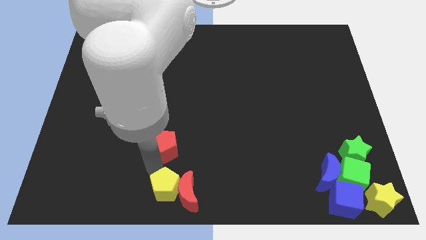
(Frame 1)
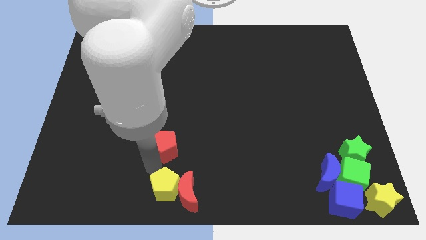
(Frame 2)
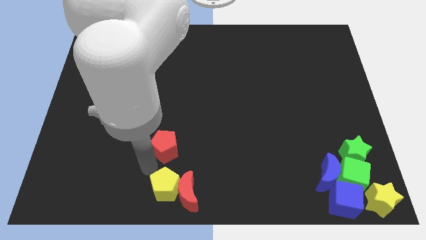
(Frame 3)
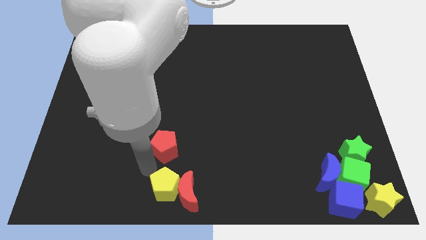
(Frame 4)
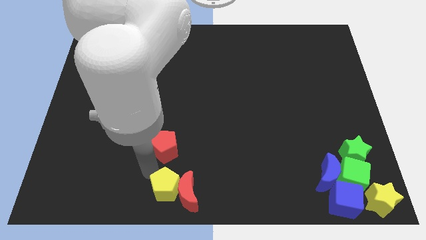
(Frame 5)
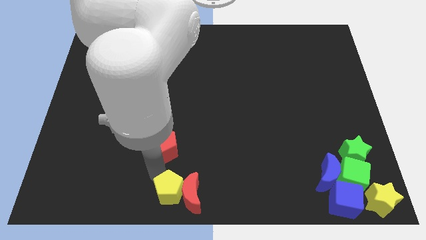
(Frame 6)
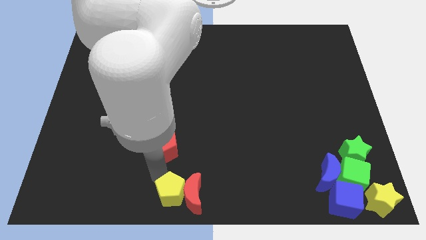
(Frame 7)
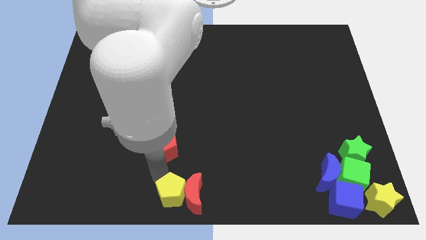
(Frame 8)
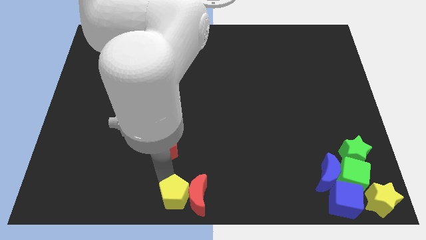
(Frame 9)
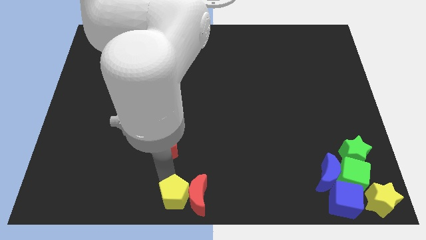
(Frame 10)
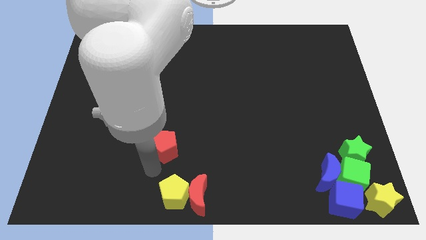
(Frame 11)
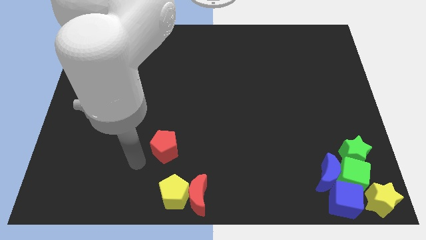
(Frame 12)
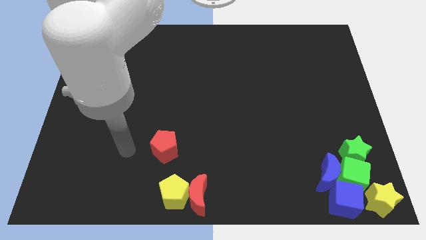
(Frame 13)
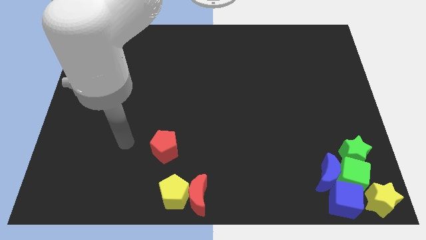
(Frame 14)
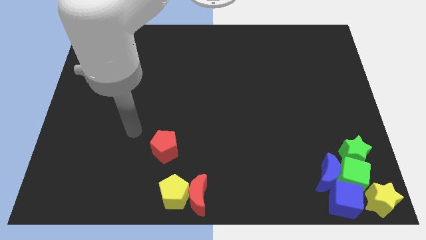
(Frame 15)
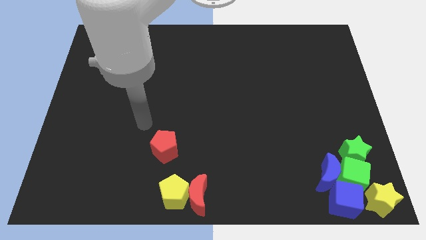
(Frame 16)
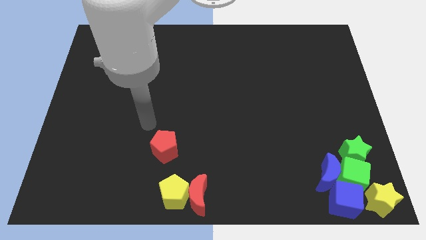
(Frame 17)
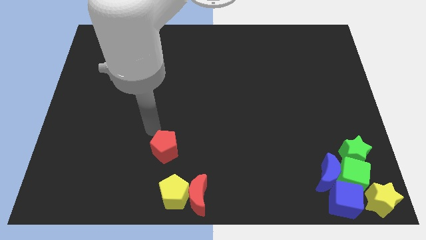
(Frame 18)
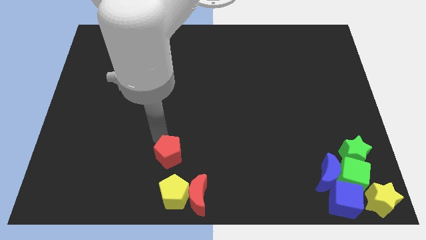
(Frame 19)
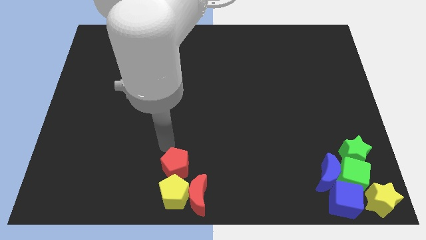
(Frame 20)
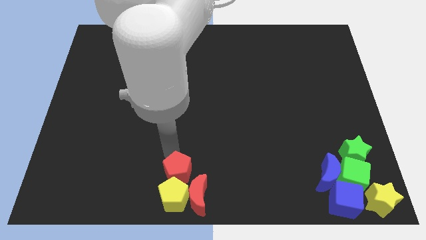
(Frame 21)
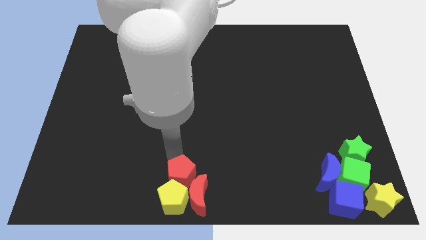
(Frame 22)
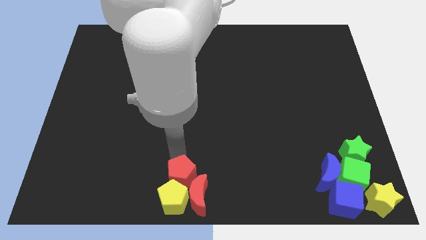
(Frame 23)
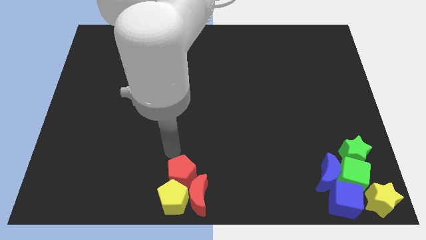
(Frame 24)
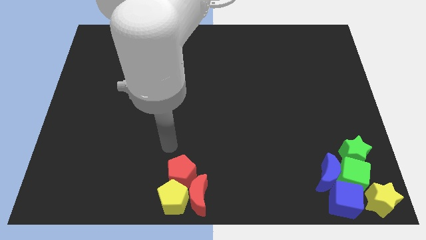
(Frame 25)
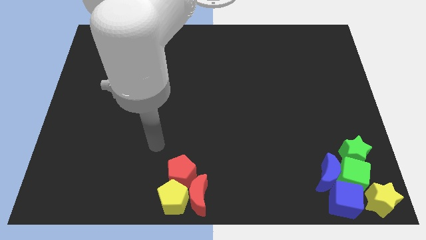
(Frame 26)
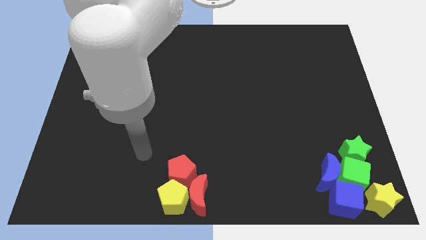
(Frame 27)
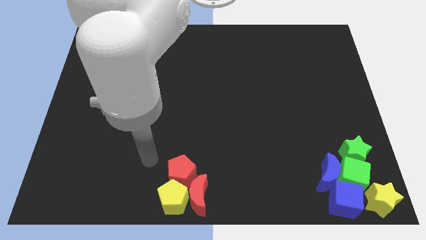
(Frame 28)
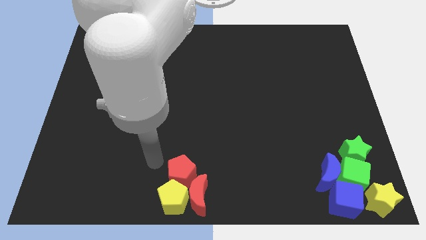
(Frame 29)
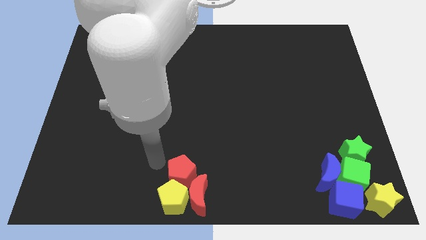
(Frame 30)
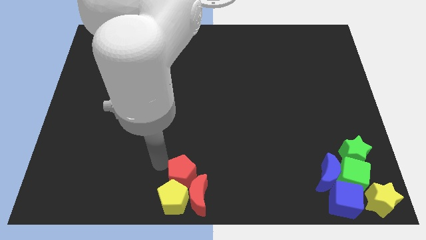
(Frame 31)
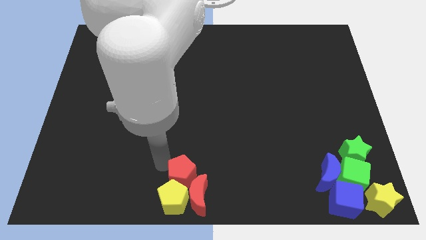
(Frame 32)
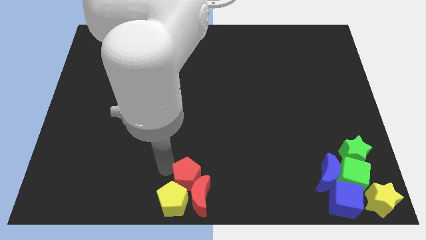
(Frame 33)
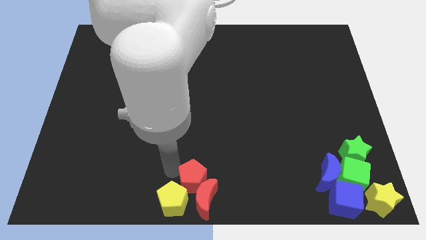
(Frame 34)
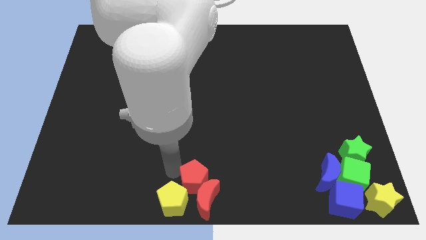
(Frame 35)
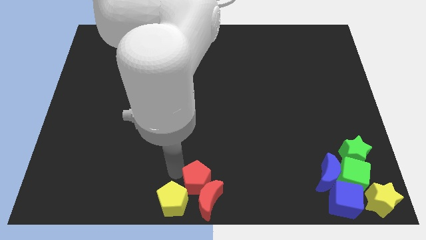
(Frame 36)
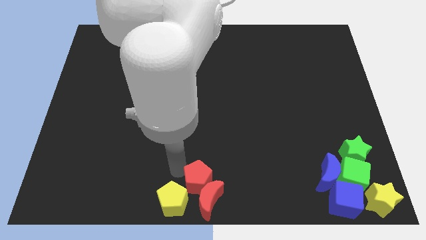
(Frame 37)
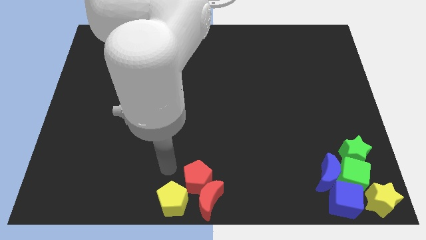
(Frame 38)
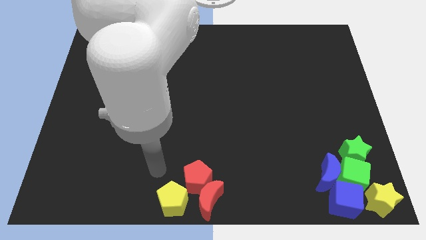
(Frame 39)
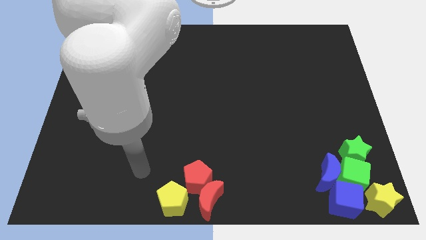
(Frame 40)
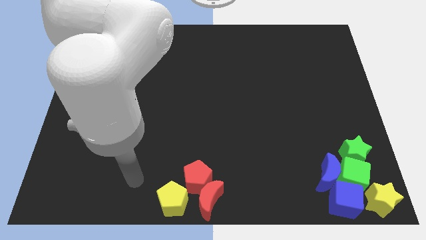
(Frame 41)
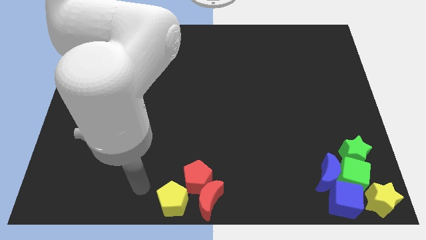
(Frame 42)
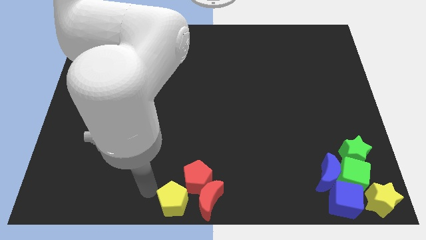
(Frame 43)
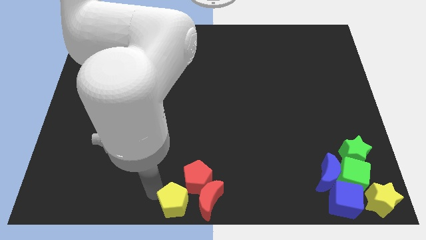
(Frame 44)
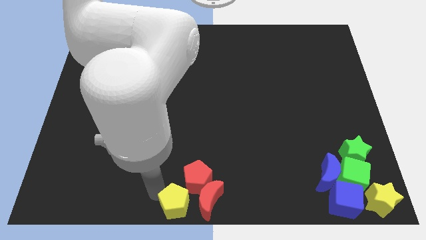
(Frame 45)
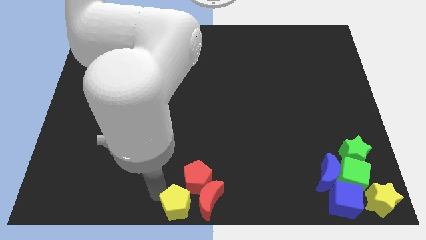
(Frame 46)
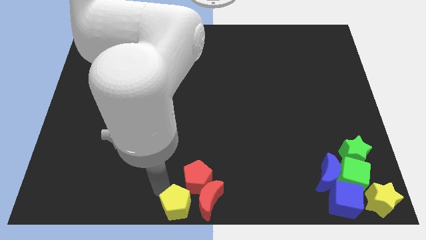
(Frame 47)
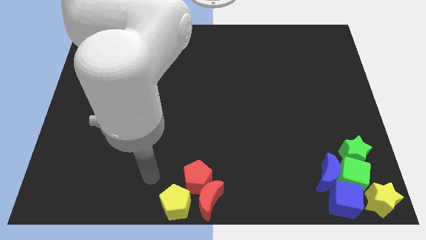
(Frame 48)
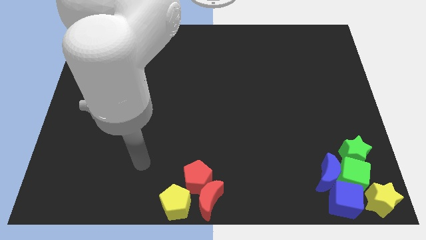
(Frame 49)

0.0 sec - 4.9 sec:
place yellow pentagon and red pentagon to the bottom center of the board

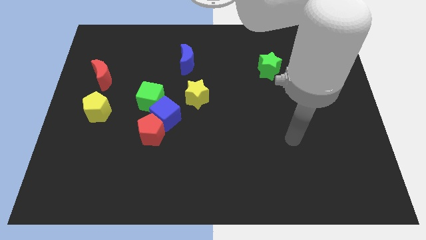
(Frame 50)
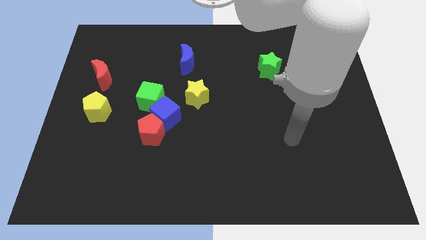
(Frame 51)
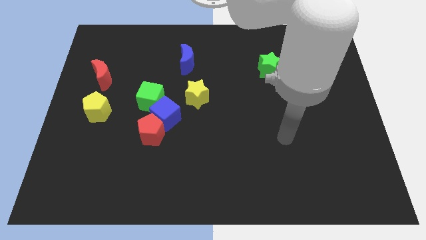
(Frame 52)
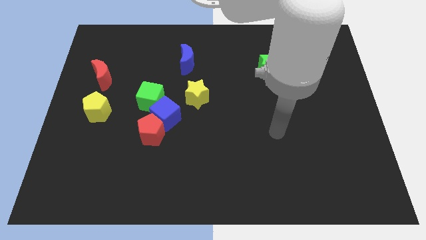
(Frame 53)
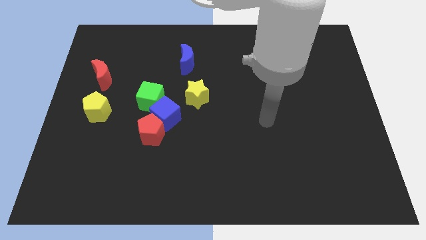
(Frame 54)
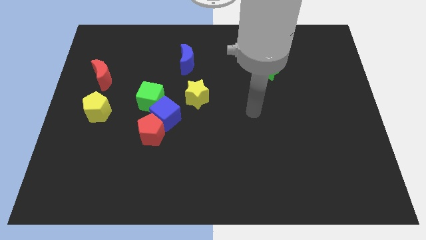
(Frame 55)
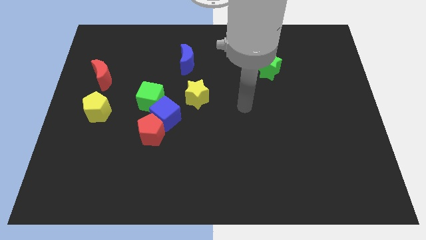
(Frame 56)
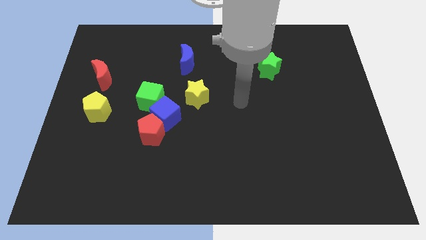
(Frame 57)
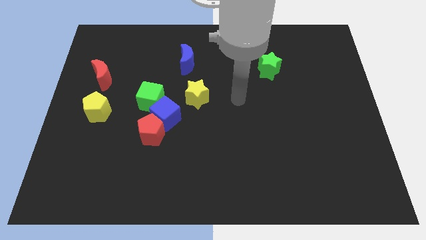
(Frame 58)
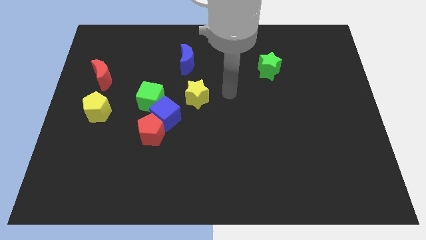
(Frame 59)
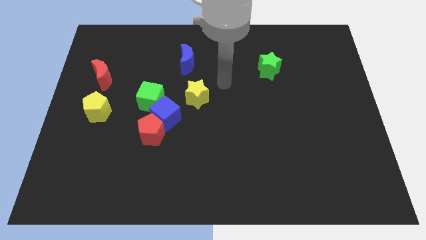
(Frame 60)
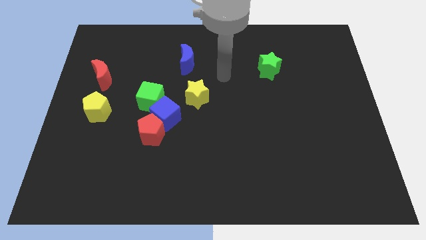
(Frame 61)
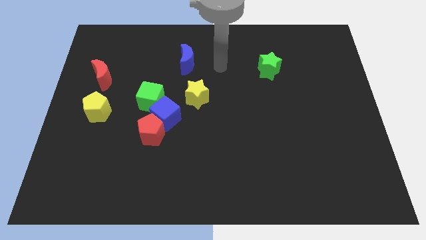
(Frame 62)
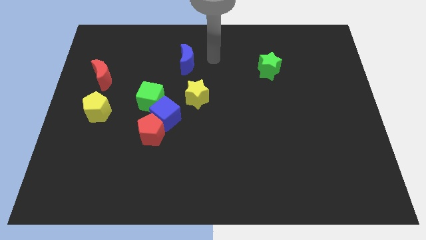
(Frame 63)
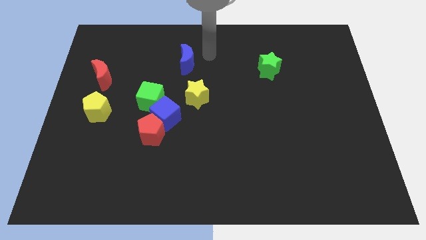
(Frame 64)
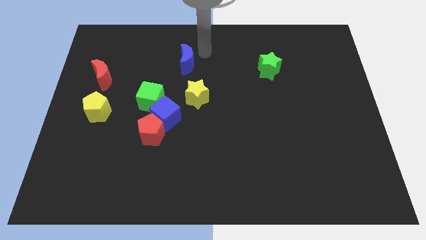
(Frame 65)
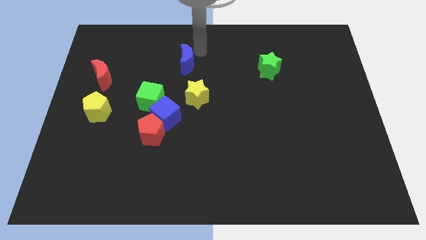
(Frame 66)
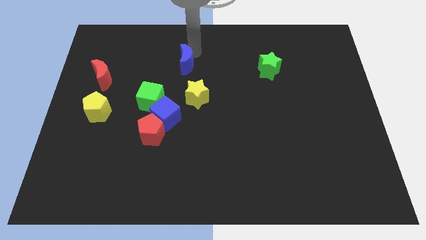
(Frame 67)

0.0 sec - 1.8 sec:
move your arm close to the blue moon

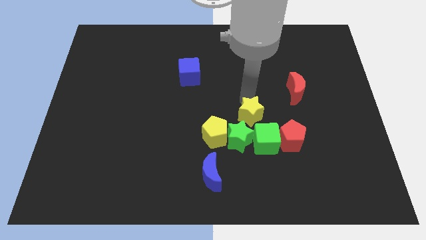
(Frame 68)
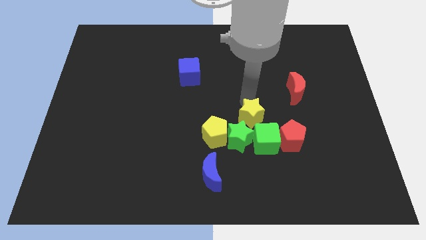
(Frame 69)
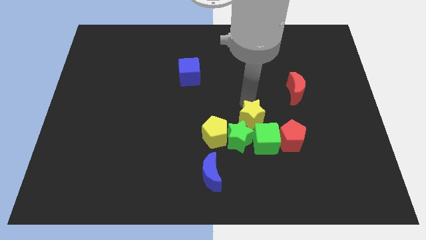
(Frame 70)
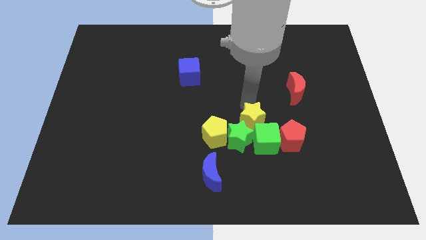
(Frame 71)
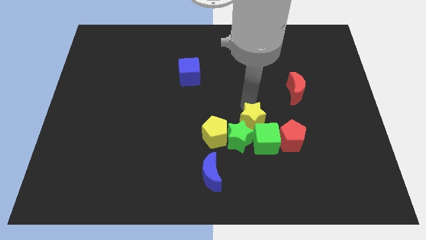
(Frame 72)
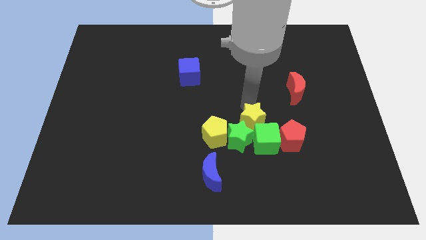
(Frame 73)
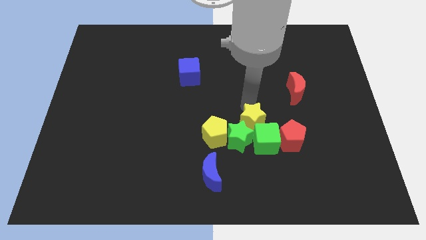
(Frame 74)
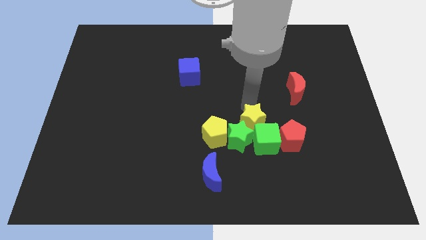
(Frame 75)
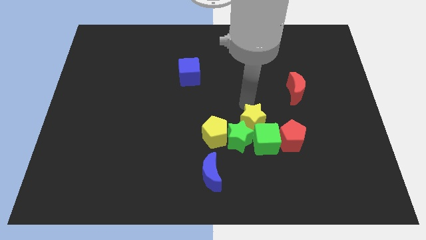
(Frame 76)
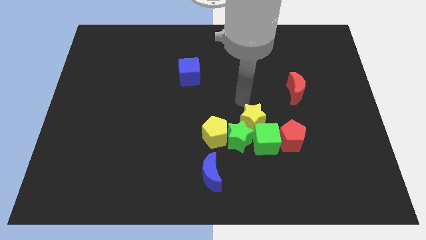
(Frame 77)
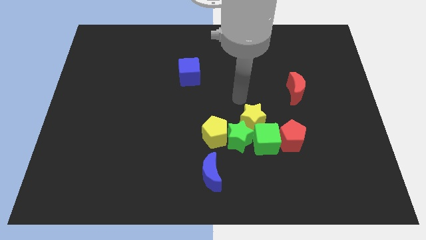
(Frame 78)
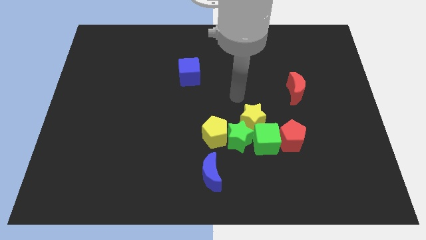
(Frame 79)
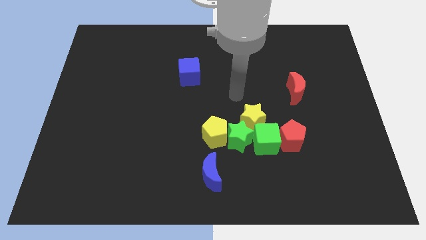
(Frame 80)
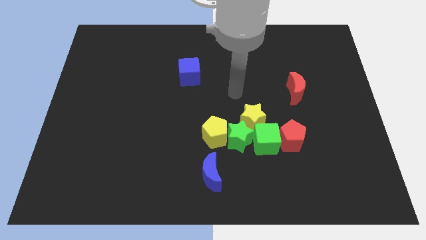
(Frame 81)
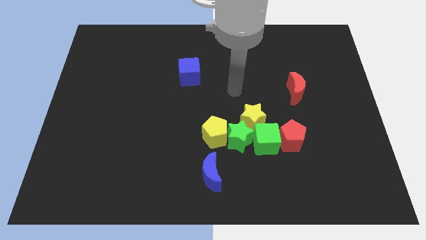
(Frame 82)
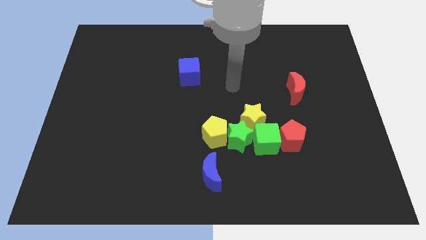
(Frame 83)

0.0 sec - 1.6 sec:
move yellow star above green cube

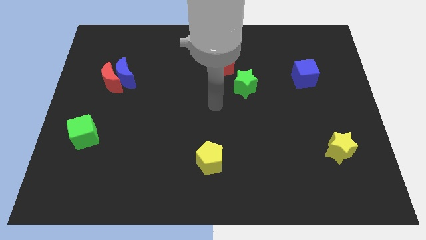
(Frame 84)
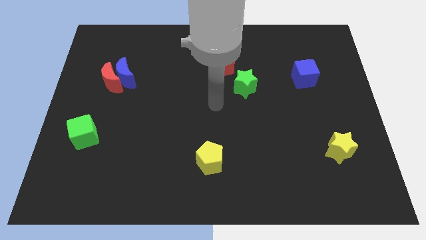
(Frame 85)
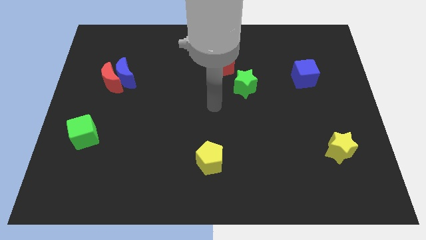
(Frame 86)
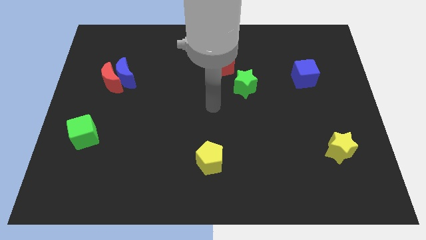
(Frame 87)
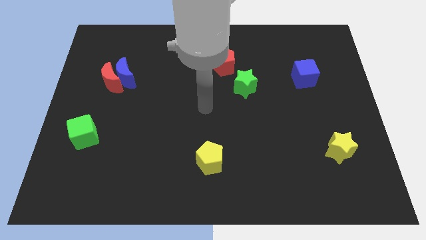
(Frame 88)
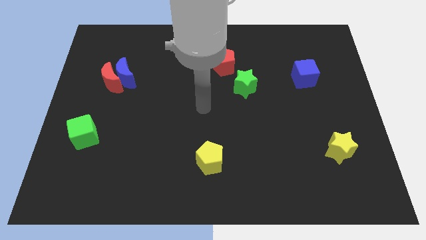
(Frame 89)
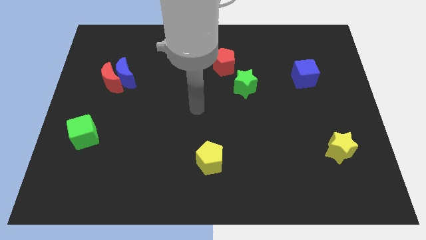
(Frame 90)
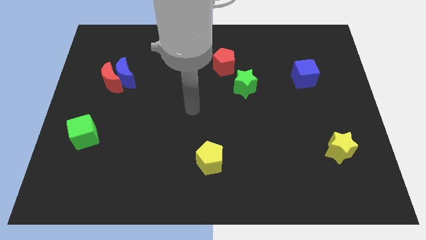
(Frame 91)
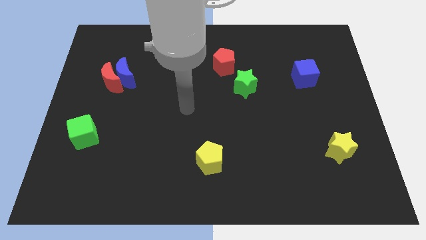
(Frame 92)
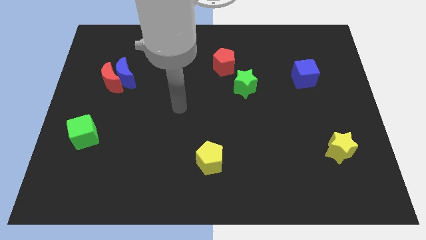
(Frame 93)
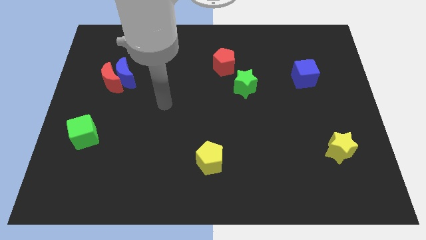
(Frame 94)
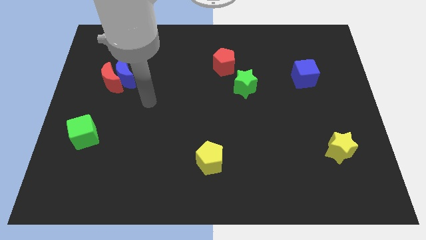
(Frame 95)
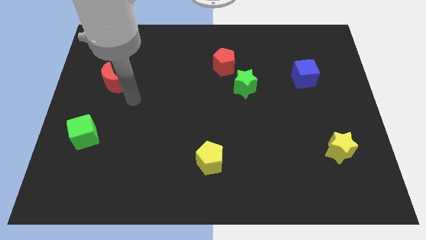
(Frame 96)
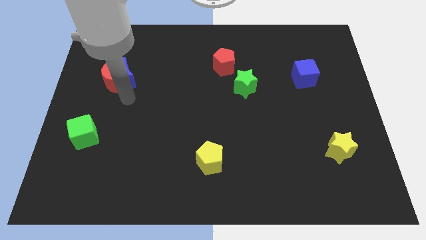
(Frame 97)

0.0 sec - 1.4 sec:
put your hand vertically below the blue moon
